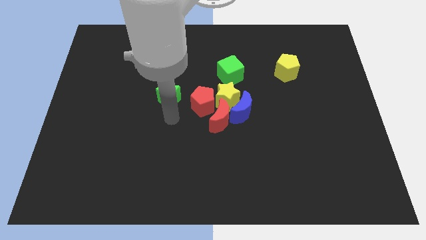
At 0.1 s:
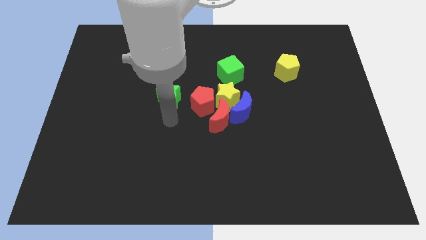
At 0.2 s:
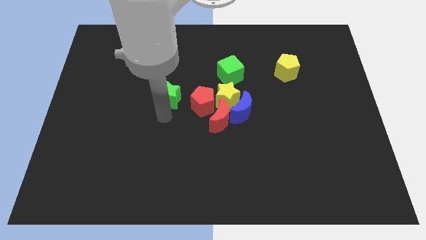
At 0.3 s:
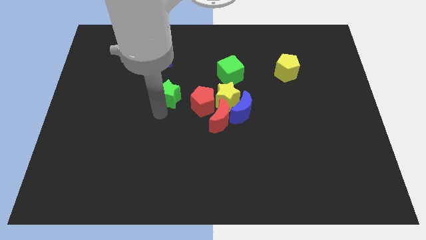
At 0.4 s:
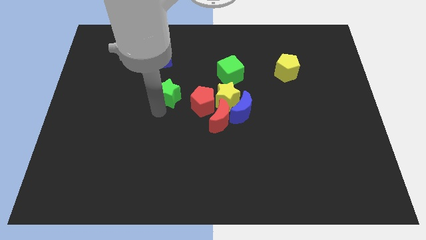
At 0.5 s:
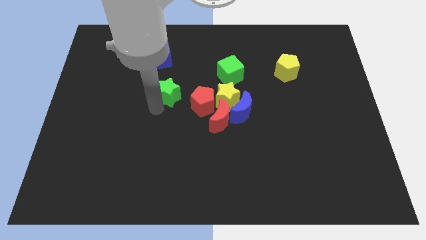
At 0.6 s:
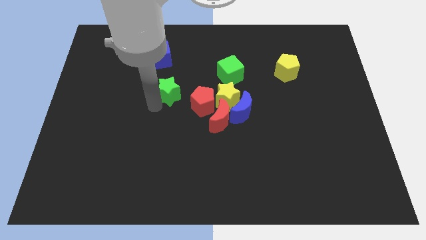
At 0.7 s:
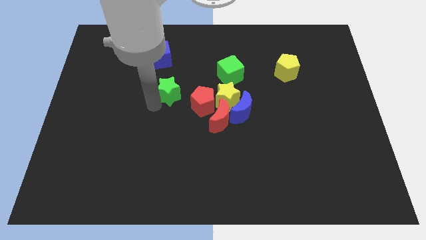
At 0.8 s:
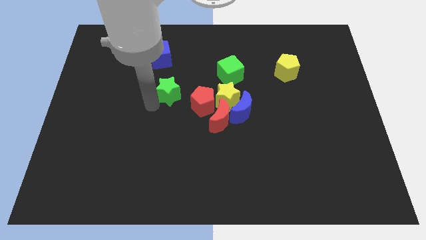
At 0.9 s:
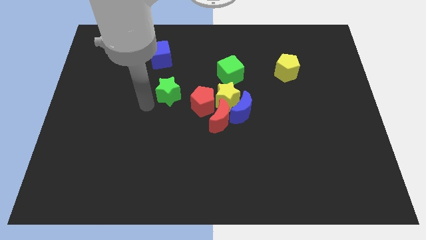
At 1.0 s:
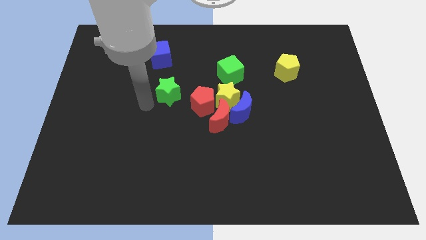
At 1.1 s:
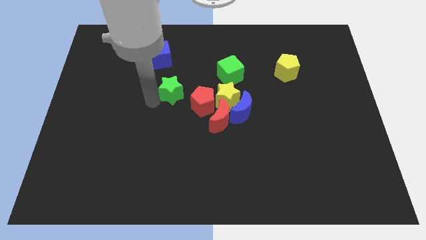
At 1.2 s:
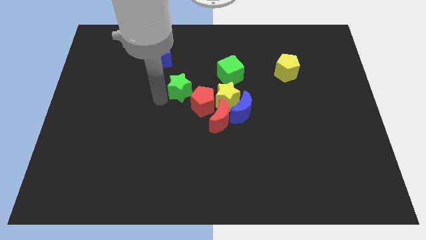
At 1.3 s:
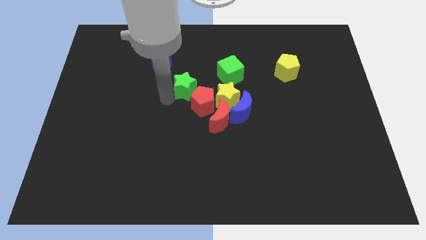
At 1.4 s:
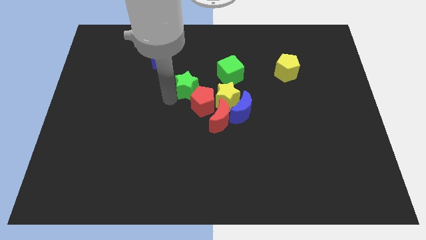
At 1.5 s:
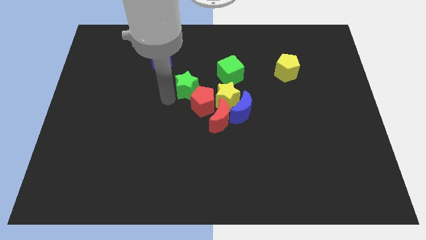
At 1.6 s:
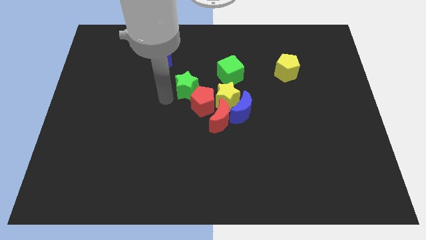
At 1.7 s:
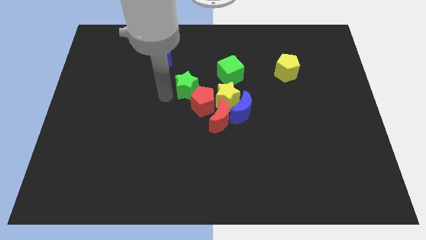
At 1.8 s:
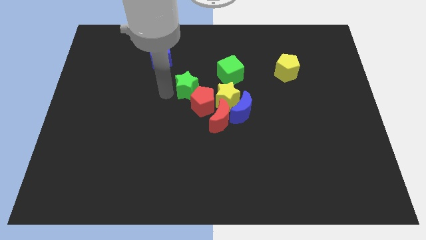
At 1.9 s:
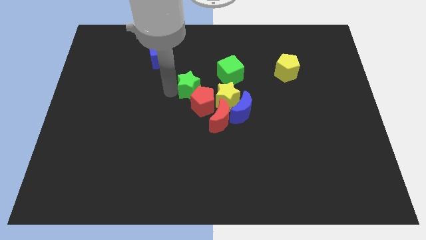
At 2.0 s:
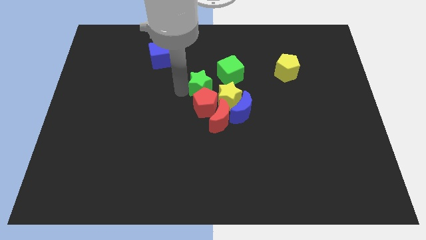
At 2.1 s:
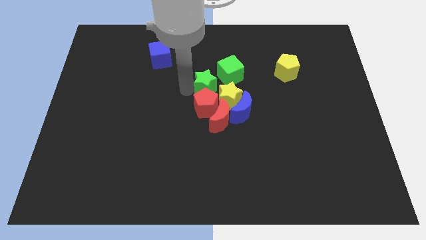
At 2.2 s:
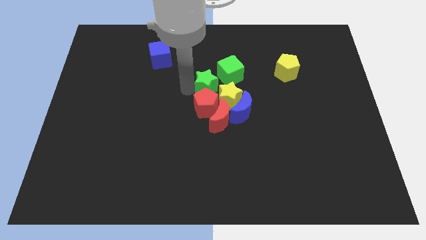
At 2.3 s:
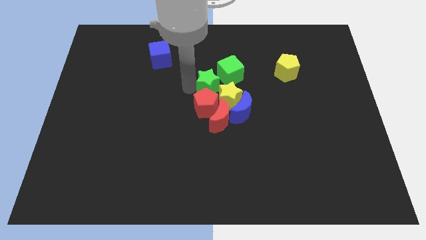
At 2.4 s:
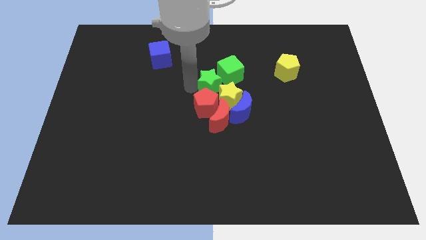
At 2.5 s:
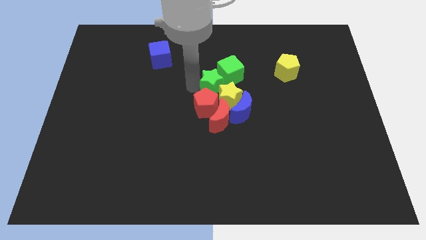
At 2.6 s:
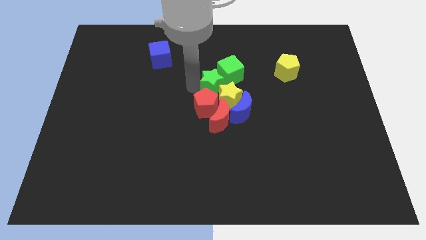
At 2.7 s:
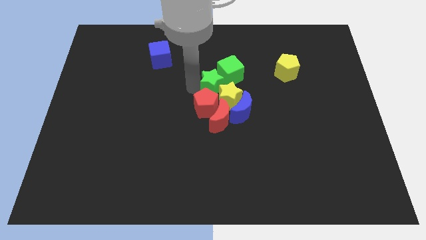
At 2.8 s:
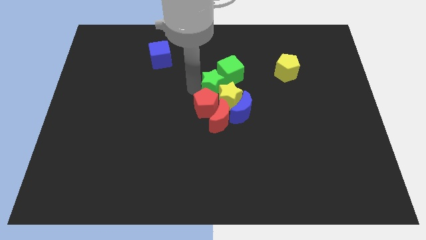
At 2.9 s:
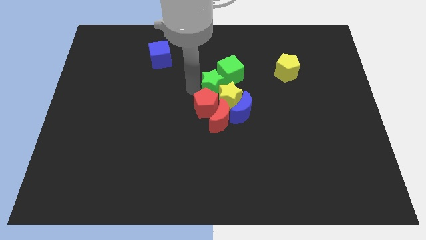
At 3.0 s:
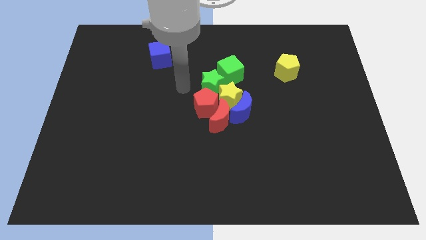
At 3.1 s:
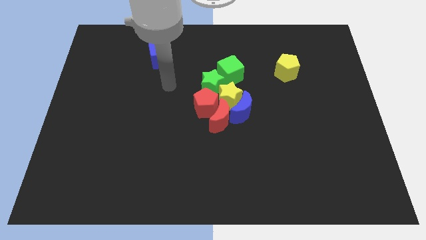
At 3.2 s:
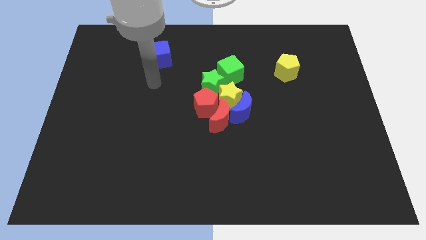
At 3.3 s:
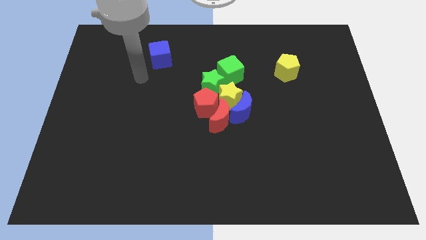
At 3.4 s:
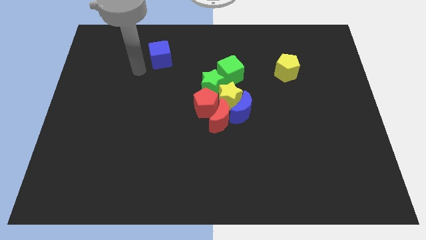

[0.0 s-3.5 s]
move the green star left beside the green cube

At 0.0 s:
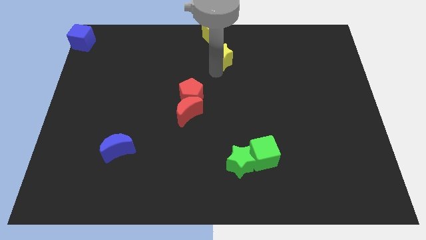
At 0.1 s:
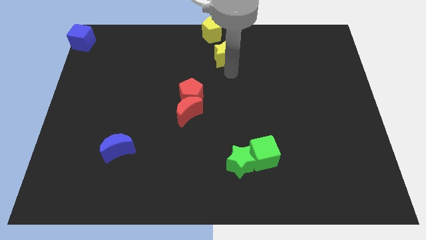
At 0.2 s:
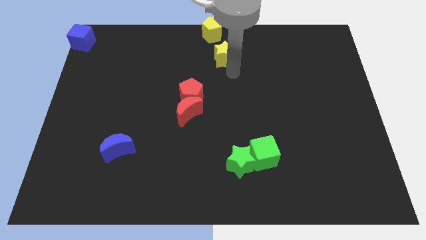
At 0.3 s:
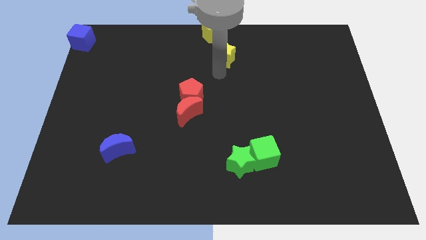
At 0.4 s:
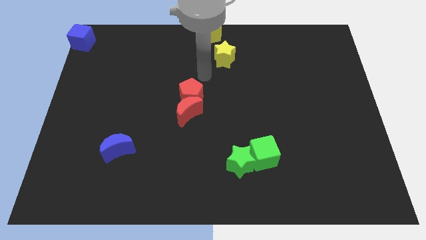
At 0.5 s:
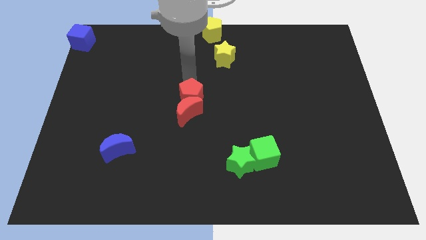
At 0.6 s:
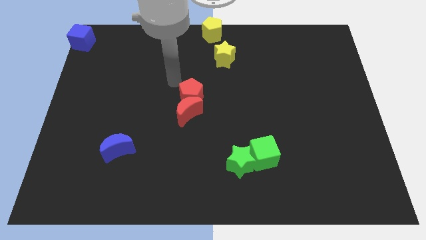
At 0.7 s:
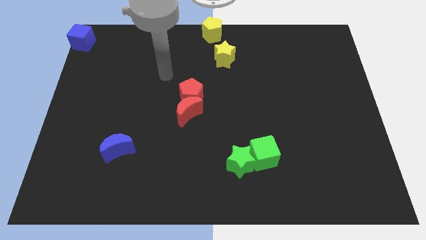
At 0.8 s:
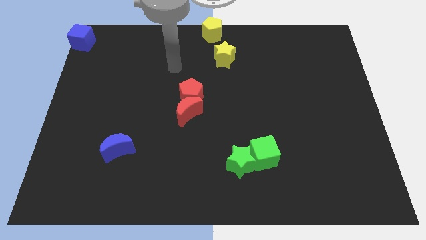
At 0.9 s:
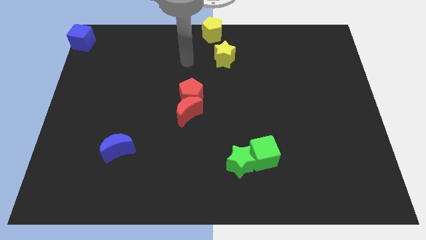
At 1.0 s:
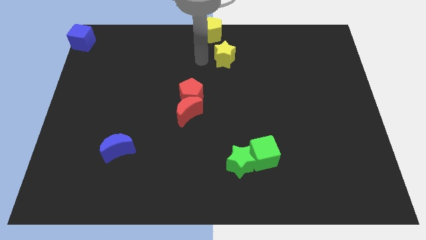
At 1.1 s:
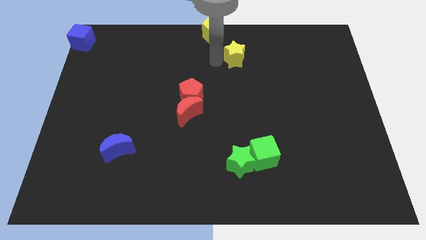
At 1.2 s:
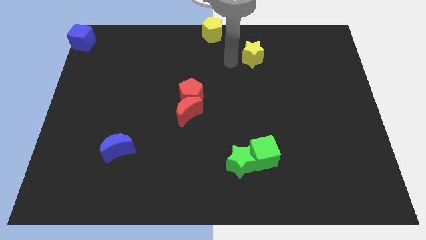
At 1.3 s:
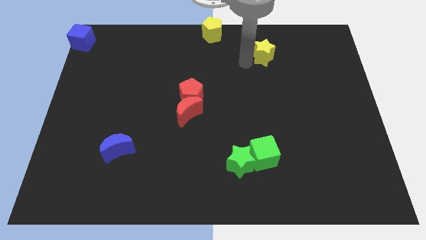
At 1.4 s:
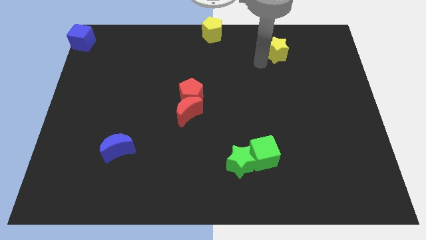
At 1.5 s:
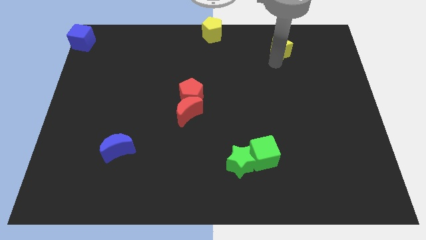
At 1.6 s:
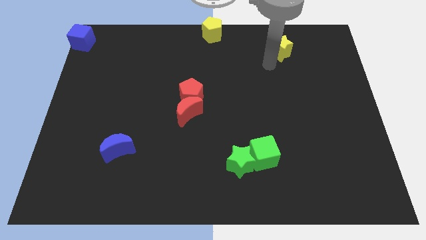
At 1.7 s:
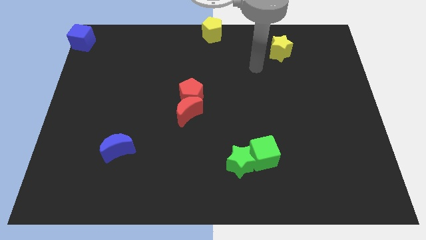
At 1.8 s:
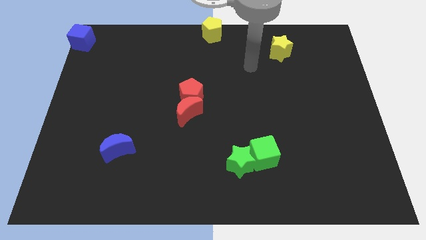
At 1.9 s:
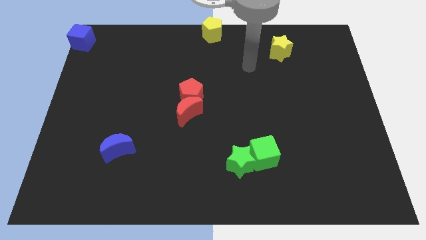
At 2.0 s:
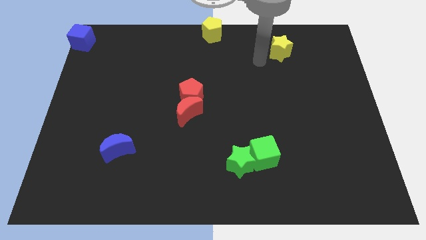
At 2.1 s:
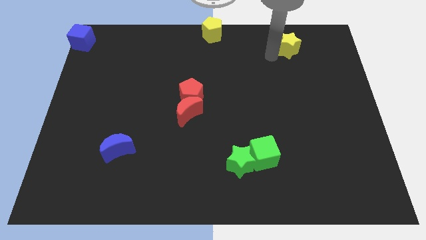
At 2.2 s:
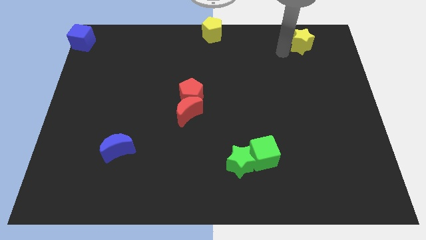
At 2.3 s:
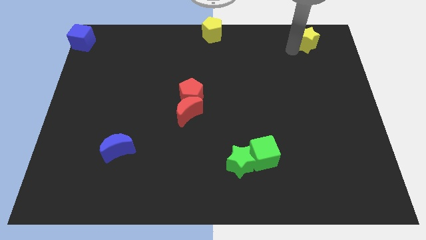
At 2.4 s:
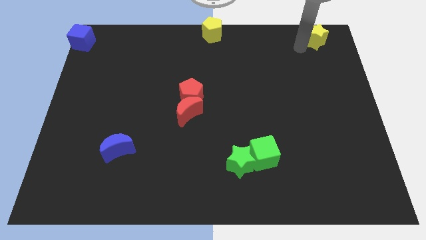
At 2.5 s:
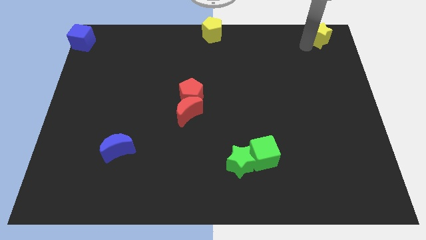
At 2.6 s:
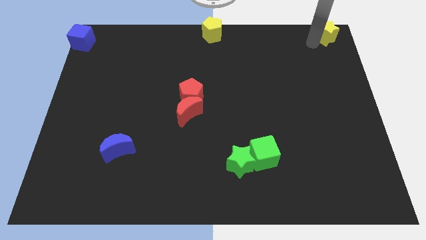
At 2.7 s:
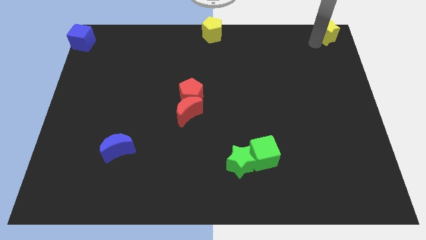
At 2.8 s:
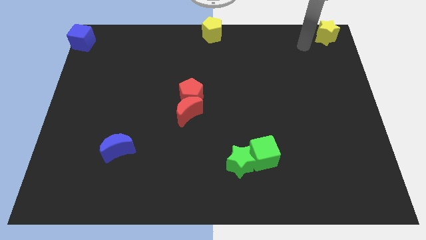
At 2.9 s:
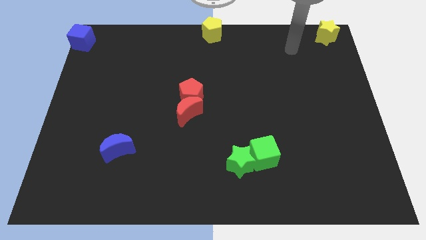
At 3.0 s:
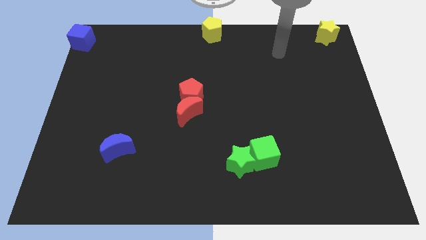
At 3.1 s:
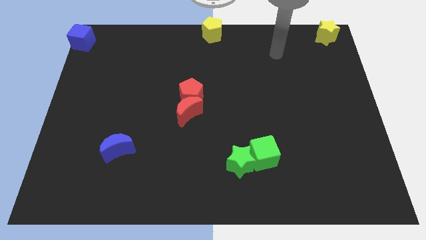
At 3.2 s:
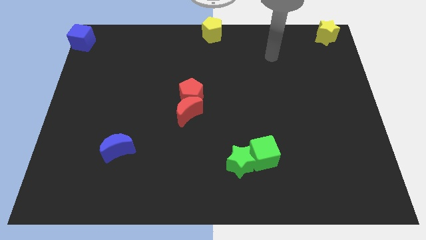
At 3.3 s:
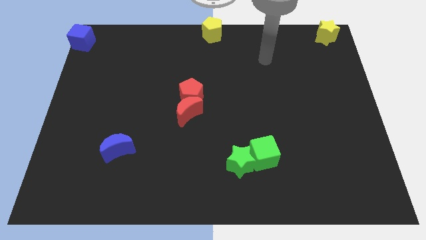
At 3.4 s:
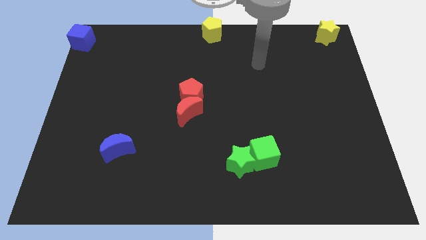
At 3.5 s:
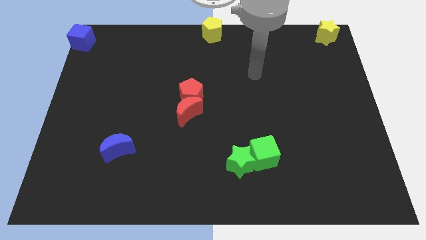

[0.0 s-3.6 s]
push the yellow star to the top right corner of the board

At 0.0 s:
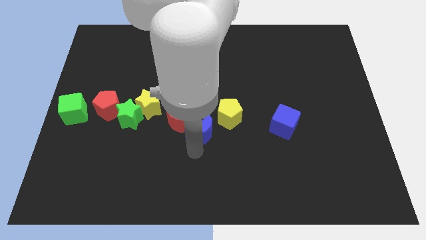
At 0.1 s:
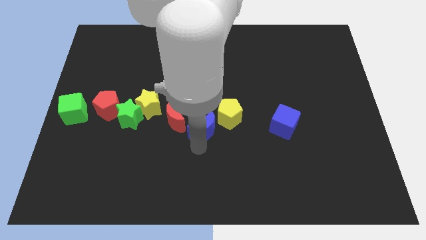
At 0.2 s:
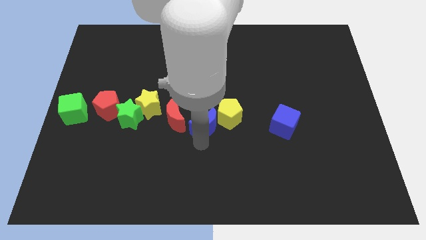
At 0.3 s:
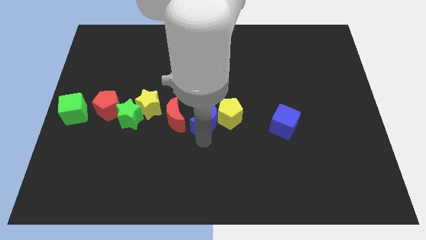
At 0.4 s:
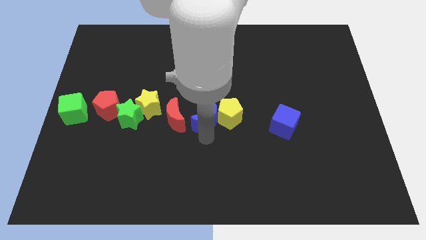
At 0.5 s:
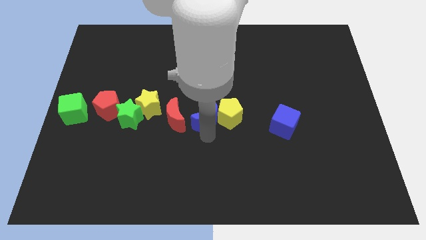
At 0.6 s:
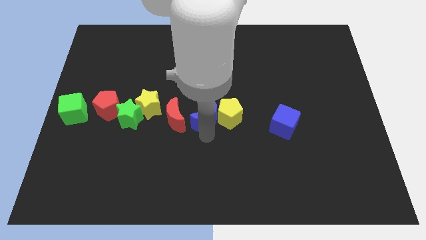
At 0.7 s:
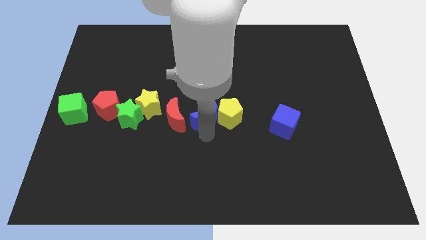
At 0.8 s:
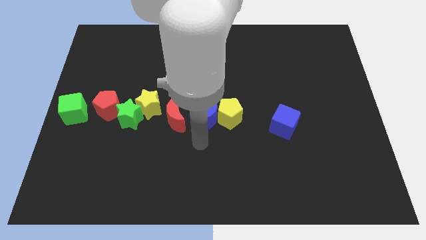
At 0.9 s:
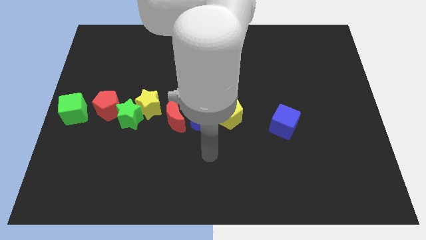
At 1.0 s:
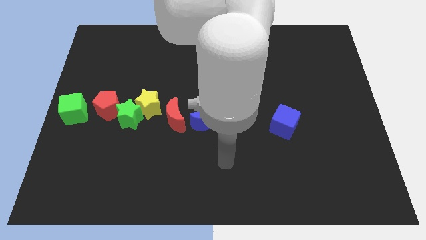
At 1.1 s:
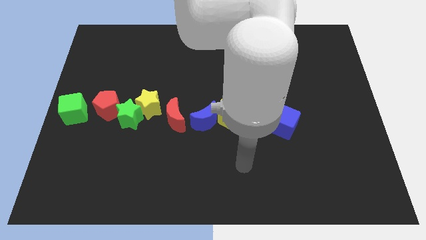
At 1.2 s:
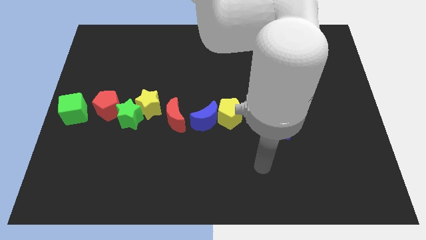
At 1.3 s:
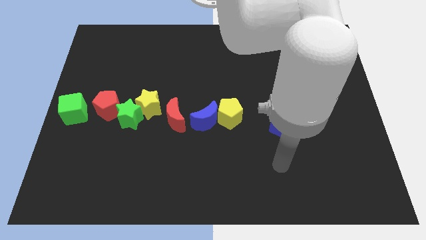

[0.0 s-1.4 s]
place the blue crescent in between the red crescent and yellow pentagon

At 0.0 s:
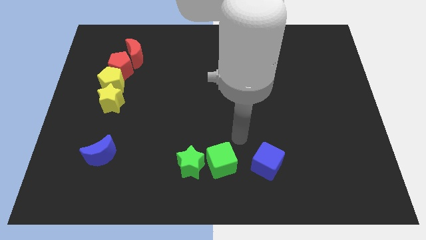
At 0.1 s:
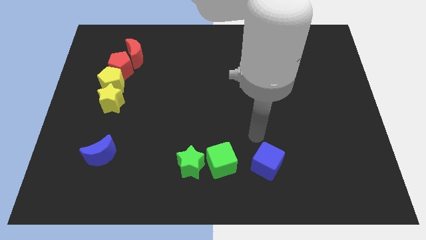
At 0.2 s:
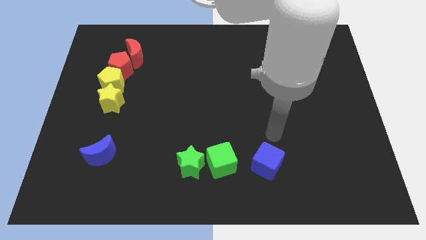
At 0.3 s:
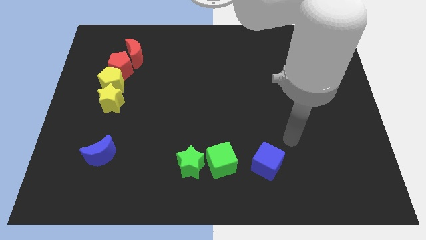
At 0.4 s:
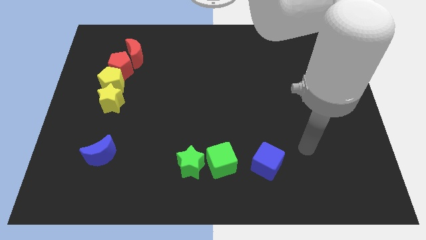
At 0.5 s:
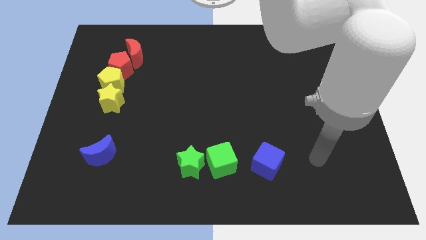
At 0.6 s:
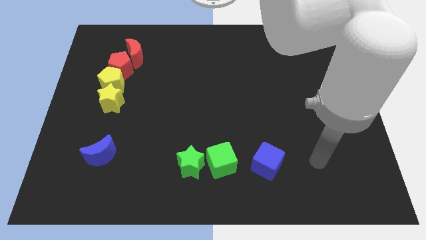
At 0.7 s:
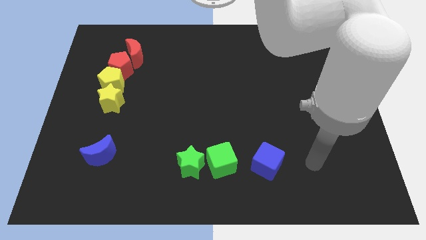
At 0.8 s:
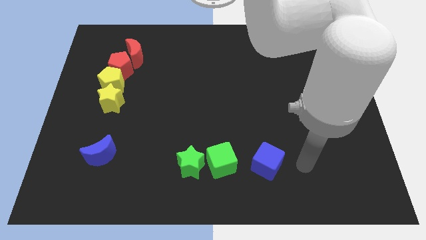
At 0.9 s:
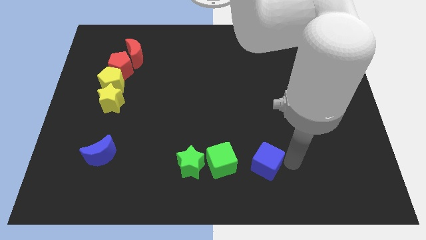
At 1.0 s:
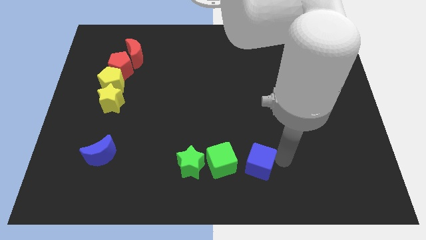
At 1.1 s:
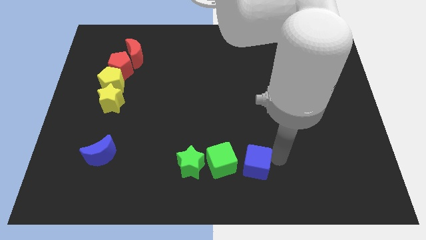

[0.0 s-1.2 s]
move the blue cube near to the green cube
